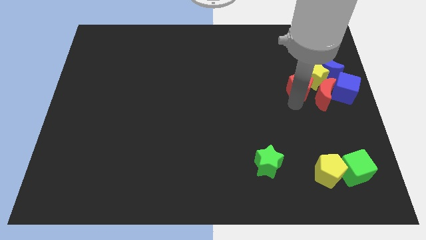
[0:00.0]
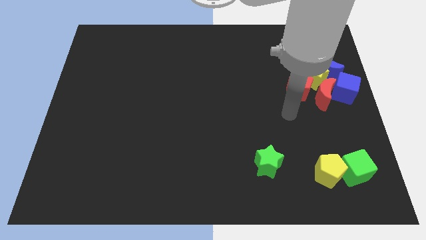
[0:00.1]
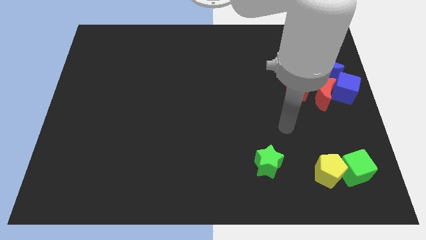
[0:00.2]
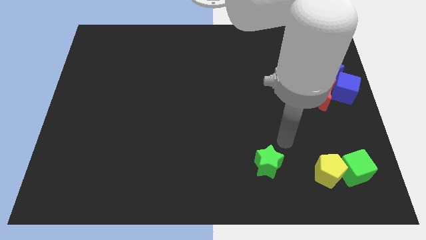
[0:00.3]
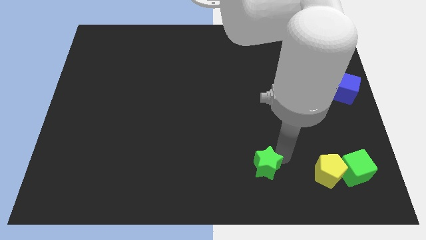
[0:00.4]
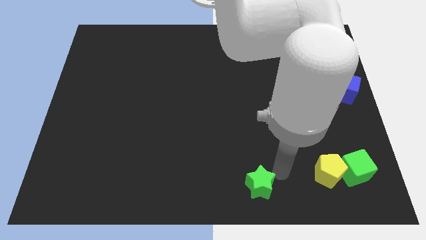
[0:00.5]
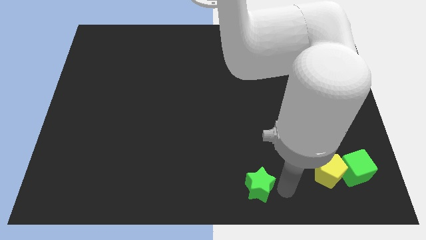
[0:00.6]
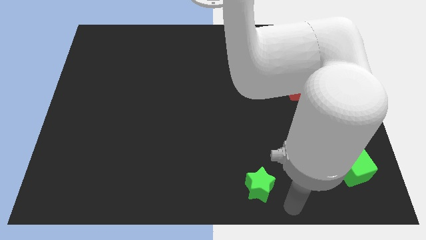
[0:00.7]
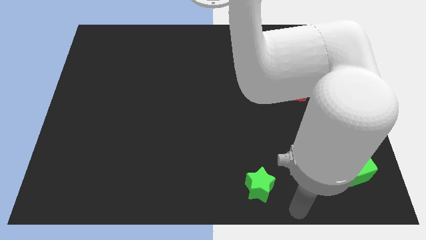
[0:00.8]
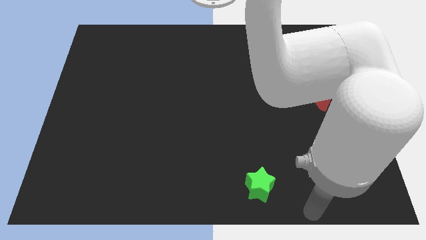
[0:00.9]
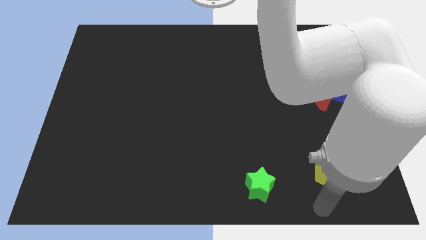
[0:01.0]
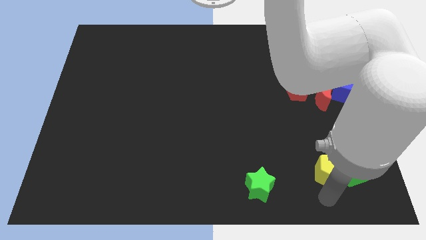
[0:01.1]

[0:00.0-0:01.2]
slightly push the green star towards bottom center of the board

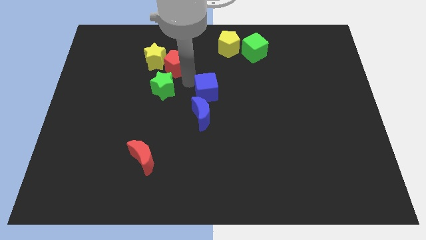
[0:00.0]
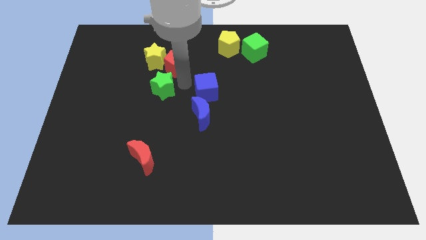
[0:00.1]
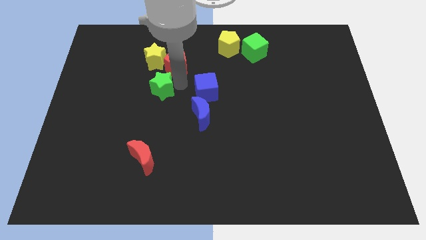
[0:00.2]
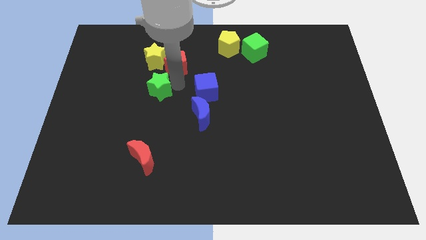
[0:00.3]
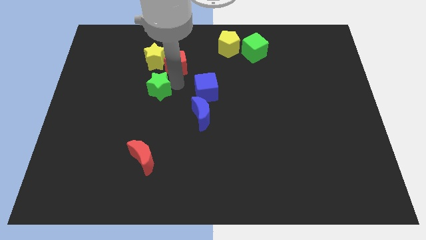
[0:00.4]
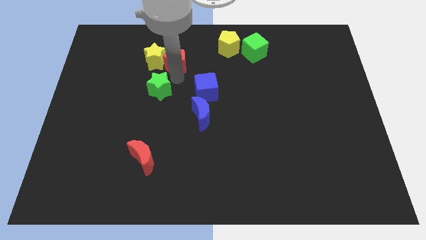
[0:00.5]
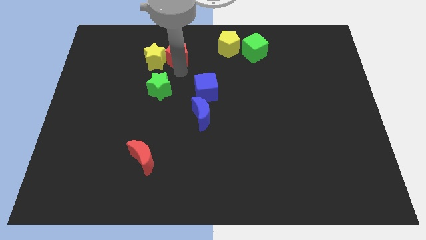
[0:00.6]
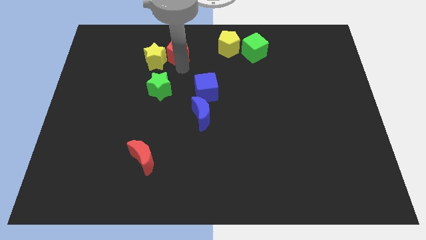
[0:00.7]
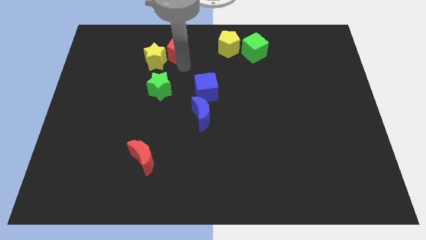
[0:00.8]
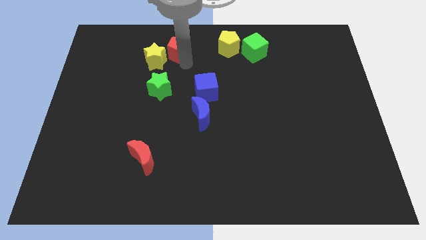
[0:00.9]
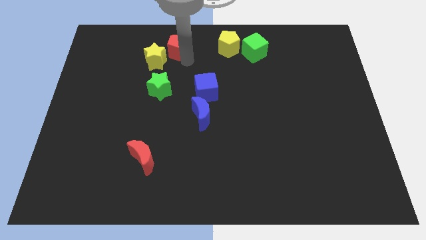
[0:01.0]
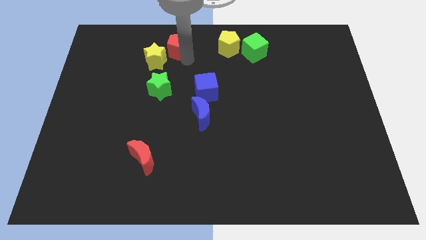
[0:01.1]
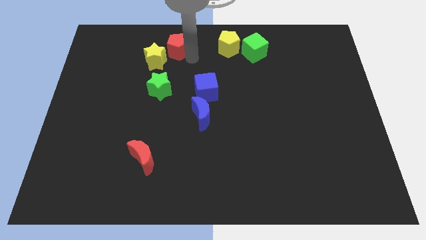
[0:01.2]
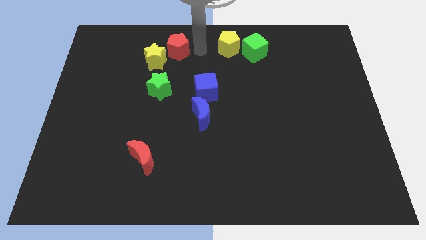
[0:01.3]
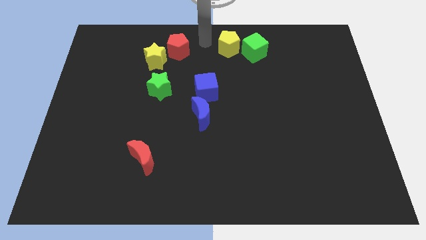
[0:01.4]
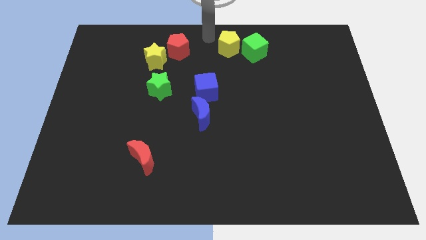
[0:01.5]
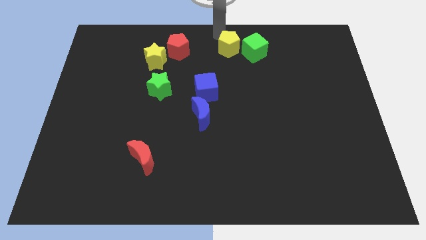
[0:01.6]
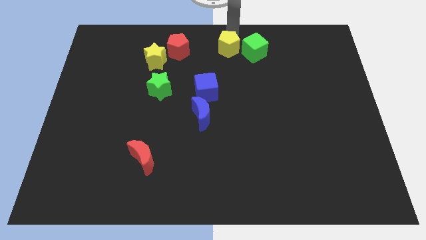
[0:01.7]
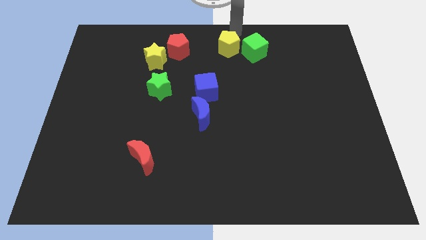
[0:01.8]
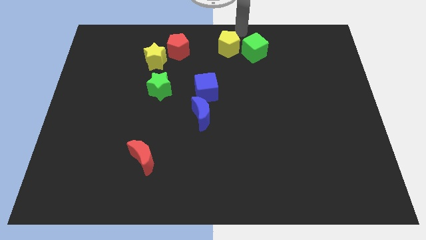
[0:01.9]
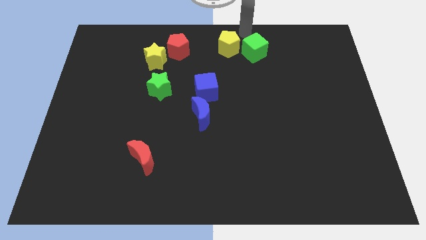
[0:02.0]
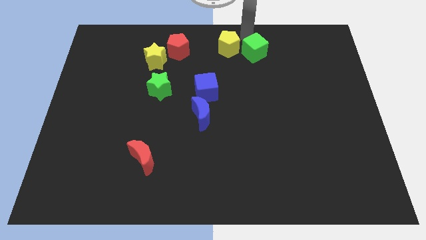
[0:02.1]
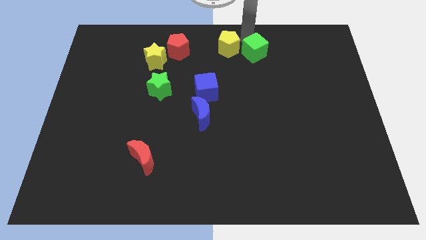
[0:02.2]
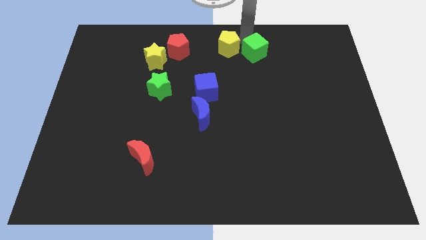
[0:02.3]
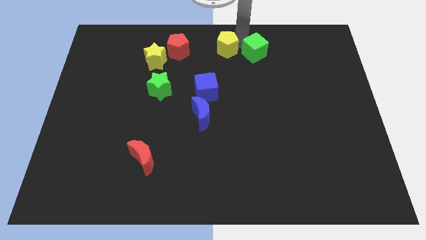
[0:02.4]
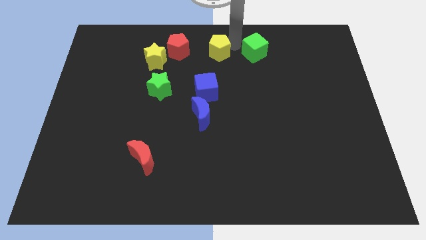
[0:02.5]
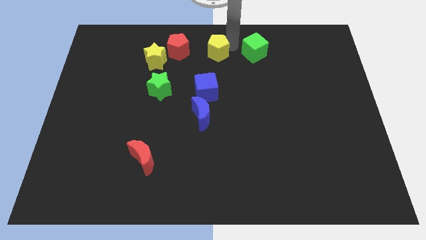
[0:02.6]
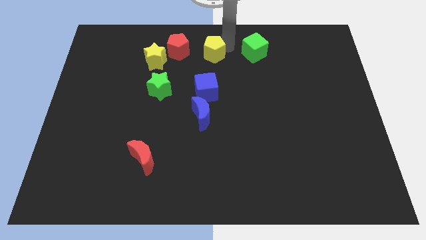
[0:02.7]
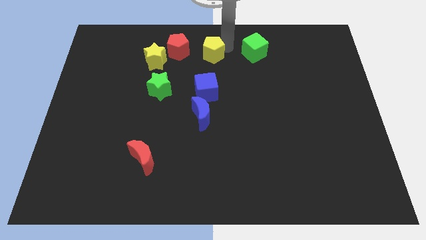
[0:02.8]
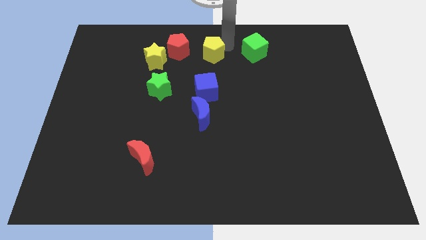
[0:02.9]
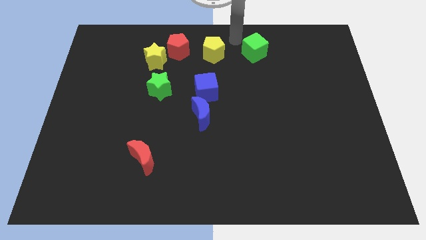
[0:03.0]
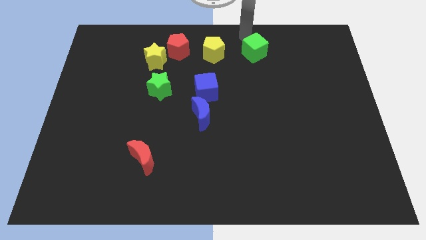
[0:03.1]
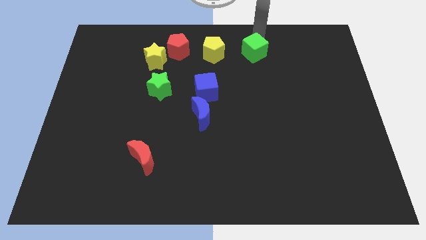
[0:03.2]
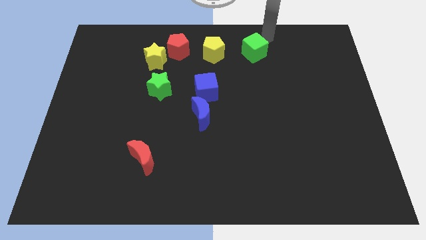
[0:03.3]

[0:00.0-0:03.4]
push the red and yellow pentagons to the left of the green cube

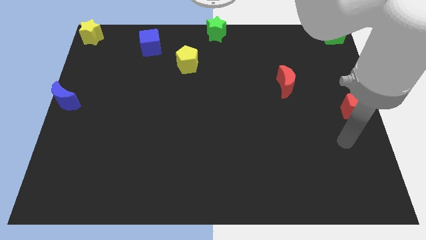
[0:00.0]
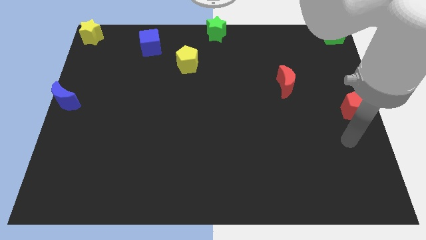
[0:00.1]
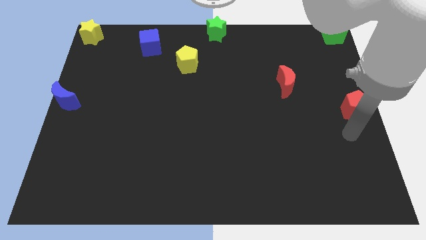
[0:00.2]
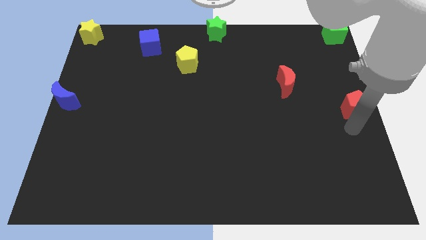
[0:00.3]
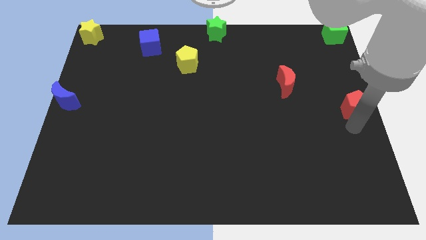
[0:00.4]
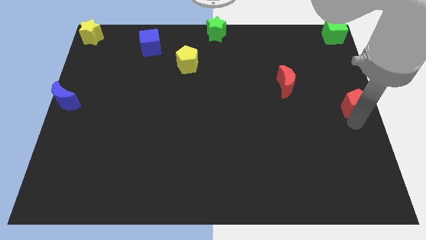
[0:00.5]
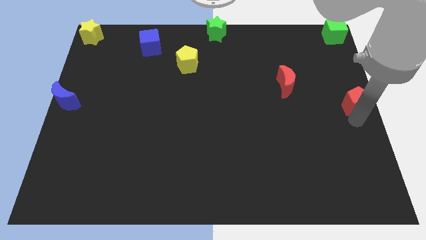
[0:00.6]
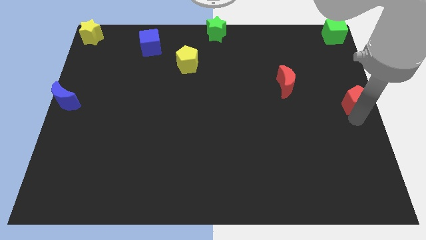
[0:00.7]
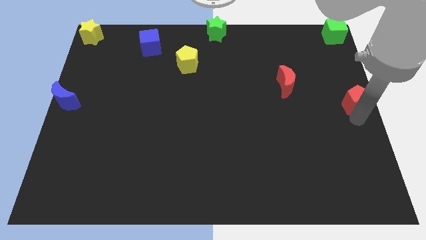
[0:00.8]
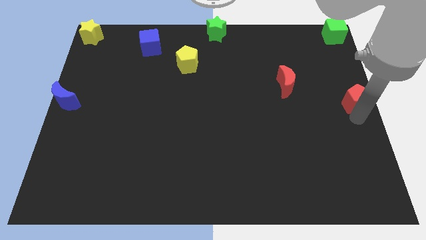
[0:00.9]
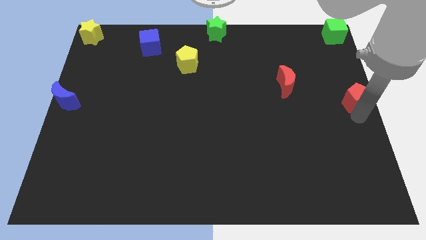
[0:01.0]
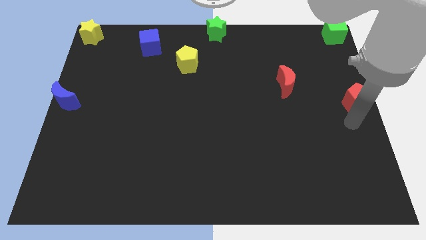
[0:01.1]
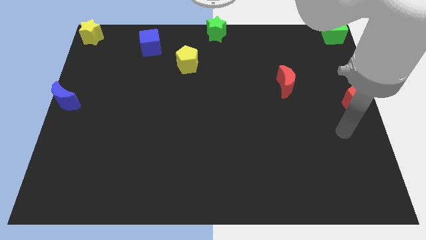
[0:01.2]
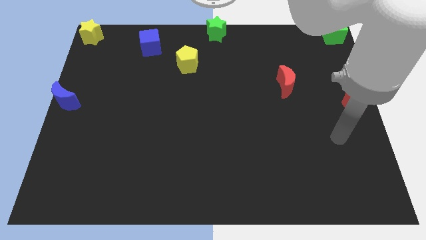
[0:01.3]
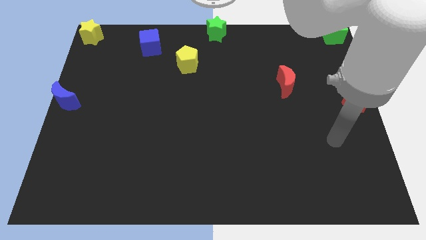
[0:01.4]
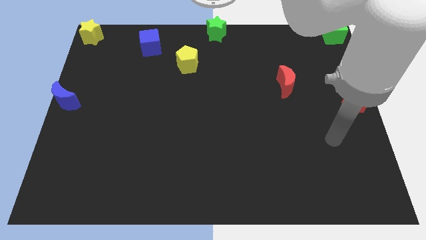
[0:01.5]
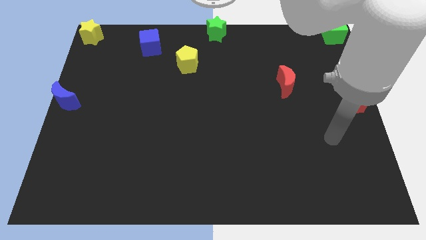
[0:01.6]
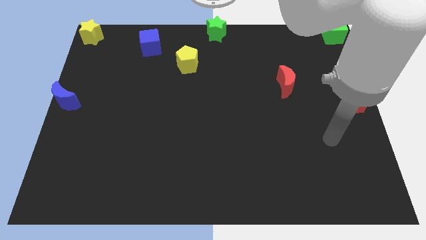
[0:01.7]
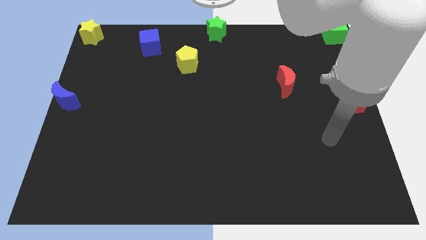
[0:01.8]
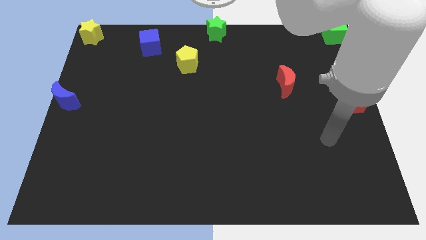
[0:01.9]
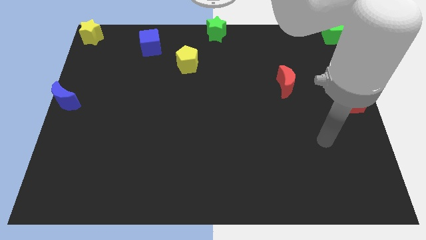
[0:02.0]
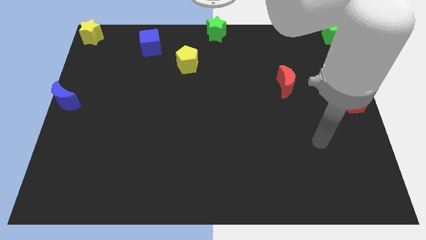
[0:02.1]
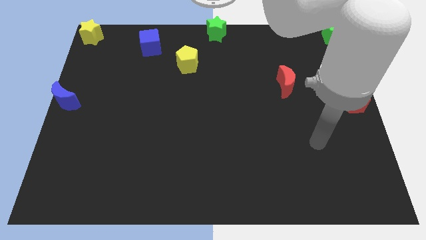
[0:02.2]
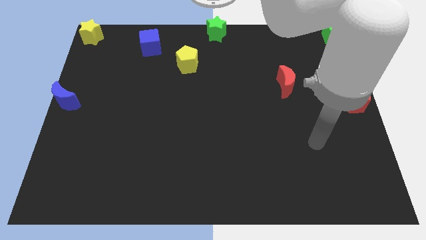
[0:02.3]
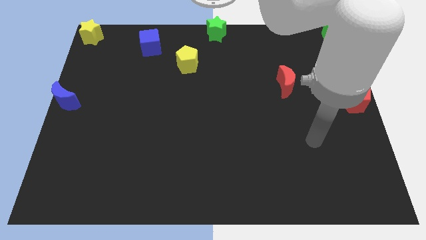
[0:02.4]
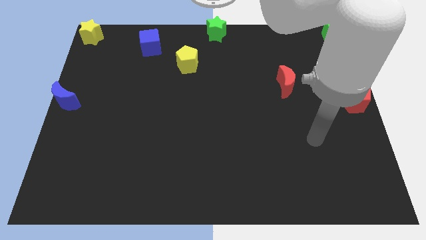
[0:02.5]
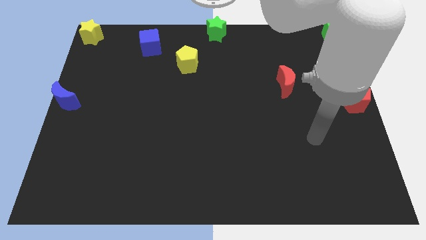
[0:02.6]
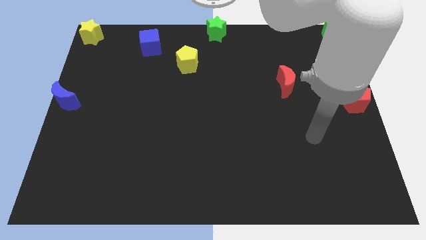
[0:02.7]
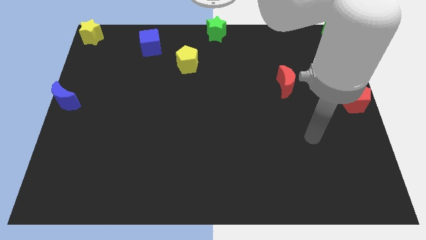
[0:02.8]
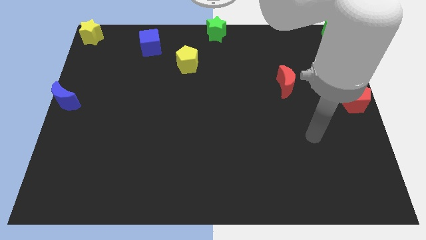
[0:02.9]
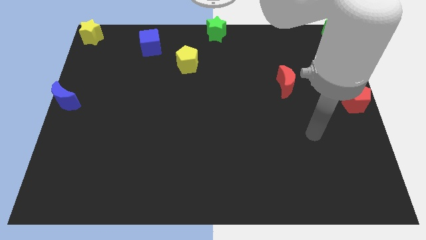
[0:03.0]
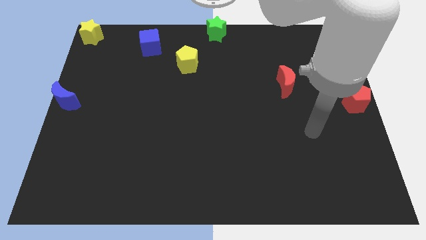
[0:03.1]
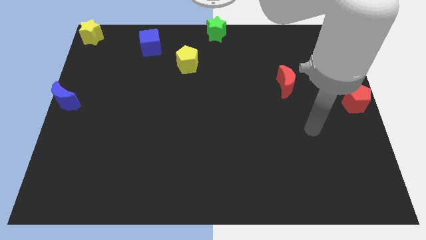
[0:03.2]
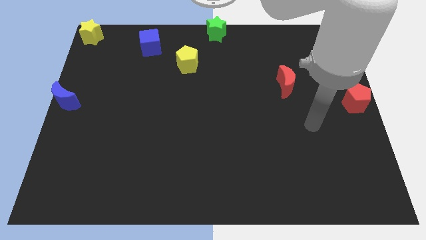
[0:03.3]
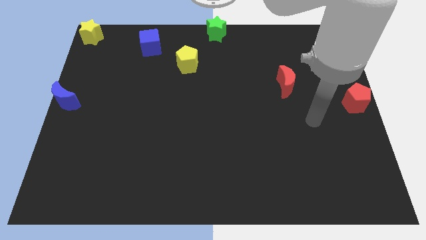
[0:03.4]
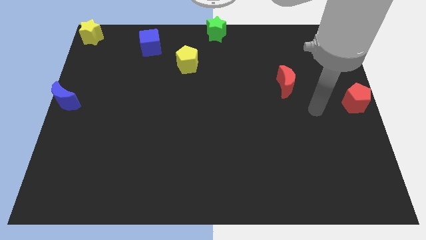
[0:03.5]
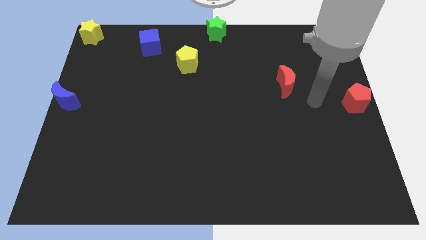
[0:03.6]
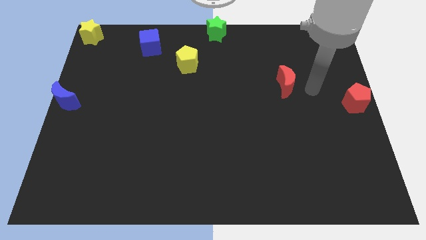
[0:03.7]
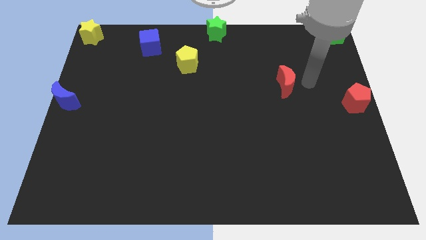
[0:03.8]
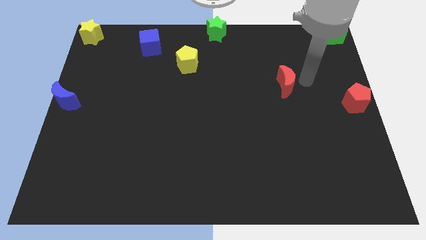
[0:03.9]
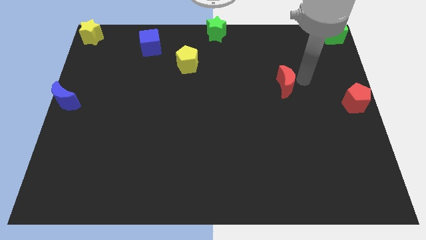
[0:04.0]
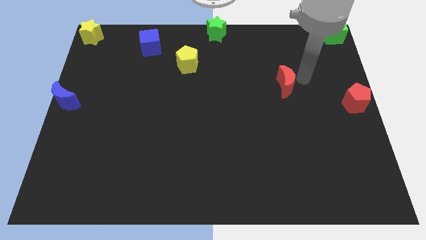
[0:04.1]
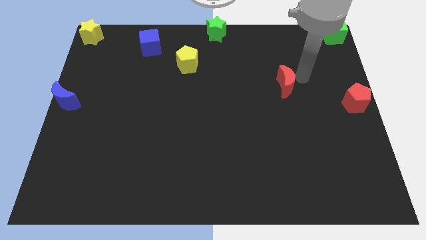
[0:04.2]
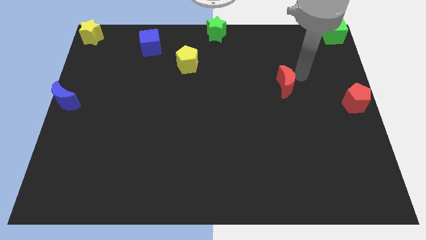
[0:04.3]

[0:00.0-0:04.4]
place your arm to the right of red crescent
